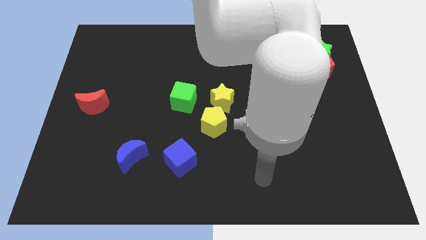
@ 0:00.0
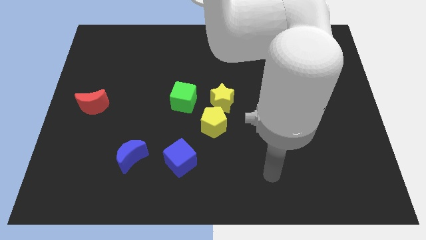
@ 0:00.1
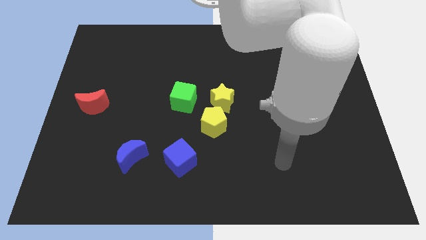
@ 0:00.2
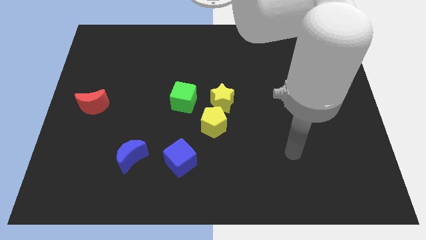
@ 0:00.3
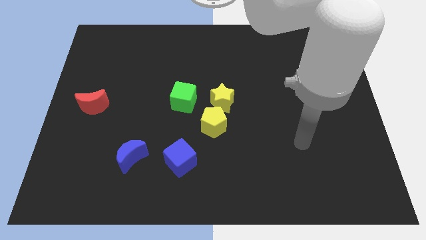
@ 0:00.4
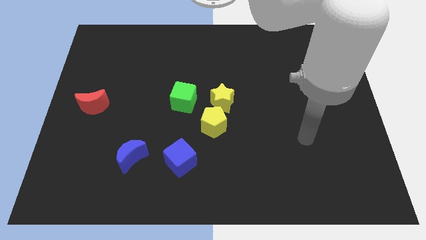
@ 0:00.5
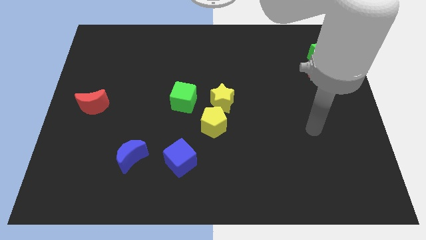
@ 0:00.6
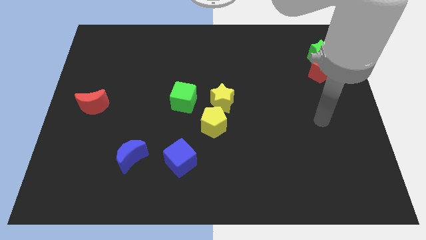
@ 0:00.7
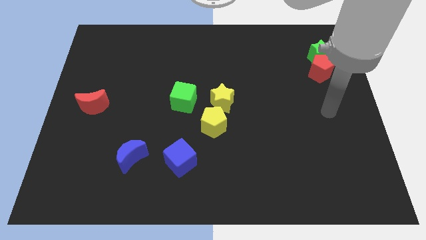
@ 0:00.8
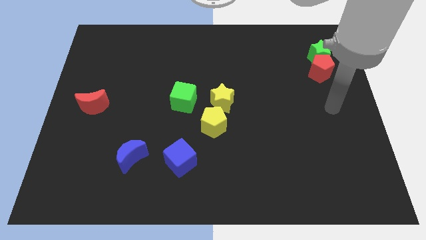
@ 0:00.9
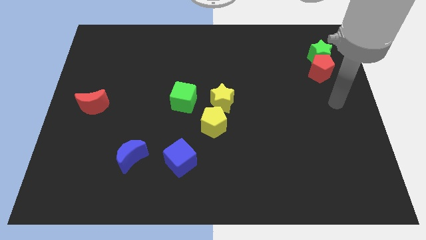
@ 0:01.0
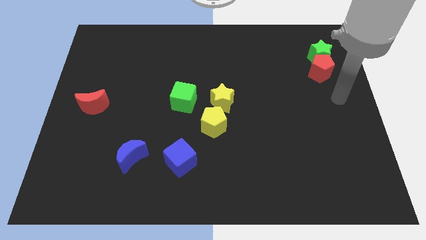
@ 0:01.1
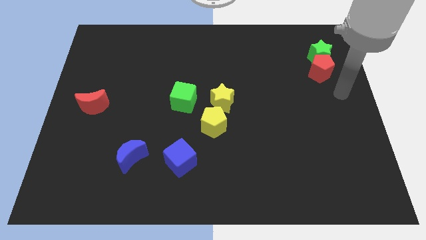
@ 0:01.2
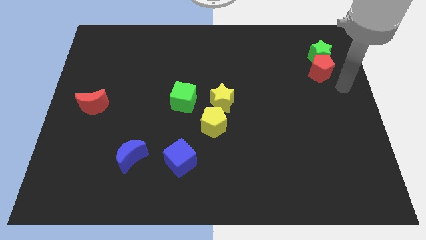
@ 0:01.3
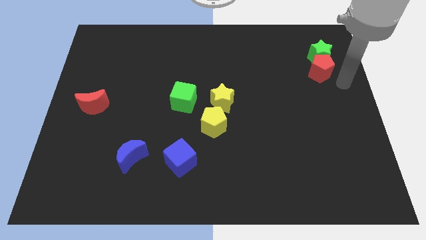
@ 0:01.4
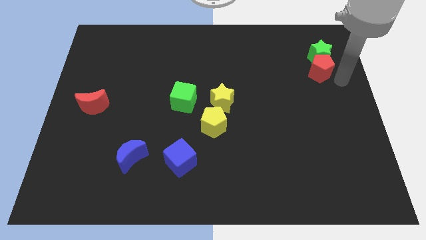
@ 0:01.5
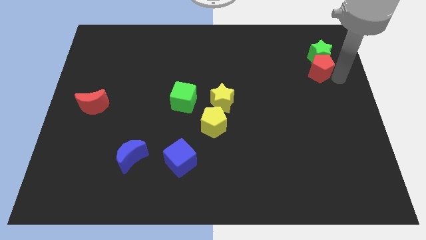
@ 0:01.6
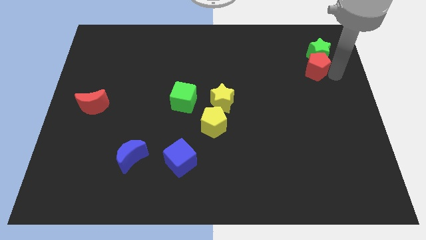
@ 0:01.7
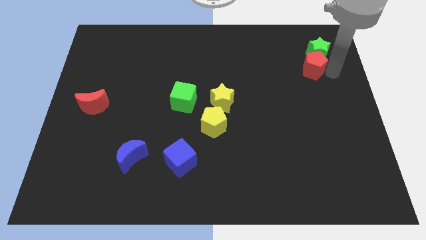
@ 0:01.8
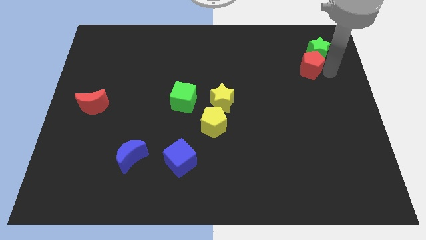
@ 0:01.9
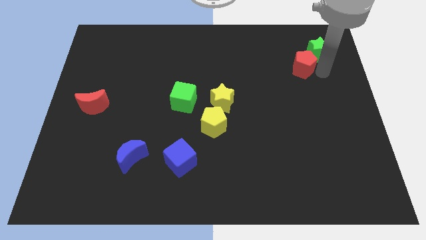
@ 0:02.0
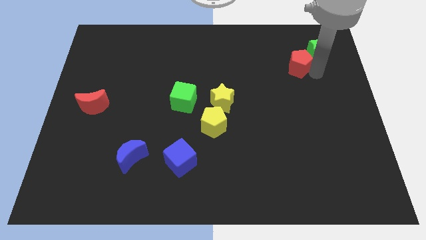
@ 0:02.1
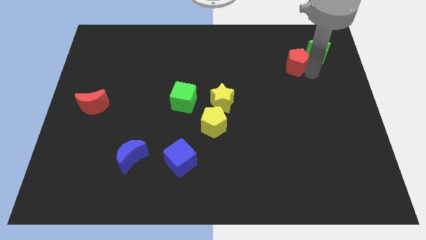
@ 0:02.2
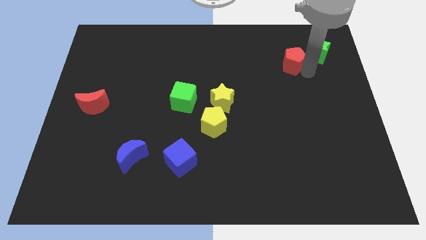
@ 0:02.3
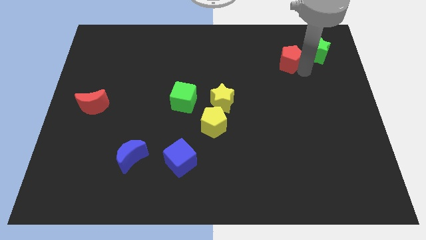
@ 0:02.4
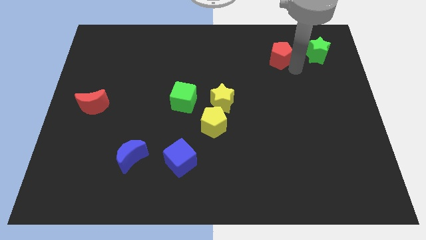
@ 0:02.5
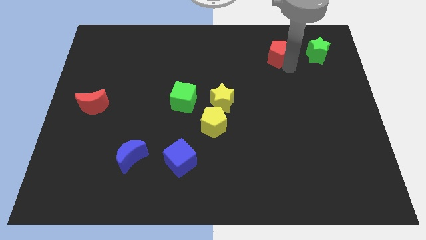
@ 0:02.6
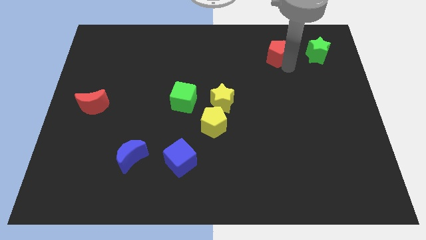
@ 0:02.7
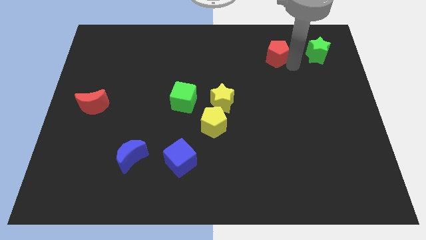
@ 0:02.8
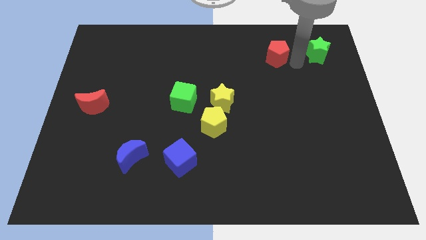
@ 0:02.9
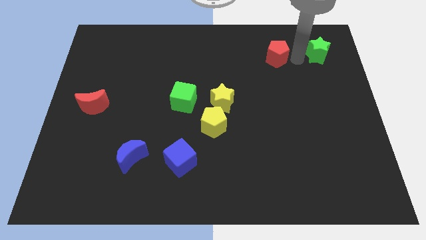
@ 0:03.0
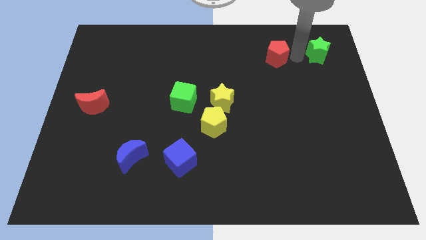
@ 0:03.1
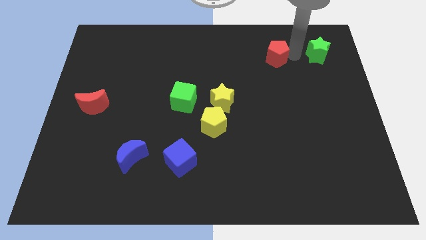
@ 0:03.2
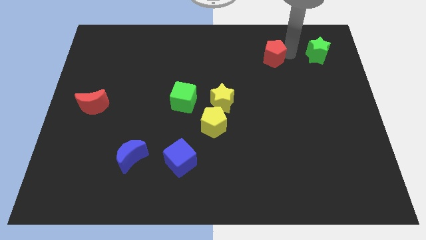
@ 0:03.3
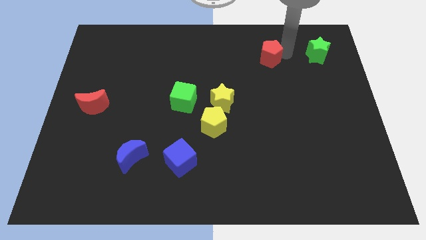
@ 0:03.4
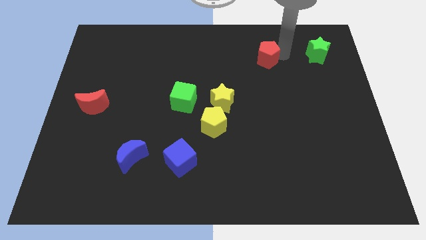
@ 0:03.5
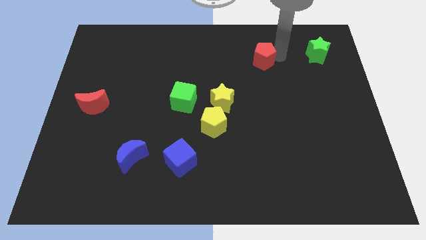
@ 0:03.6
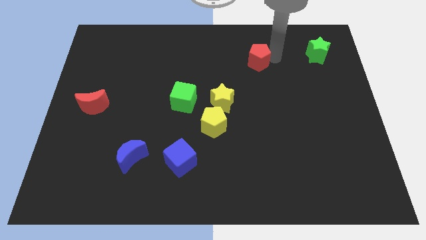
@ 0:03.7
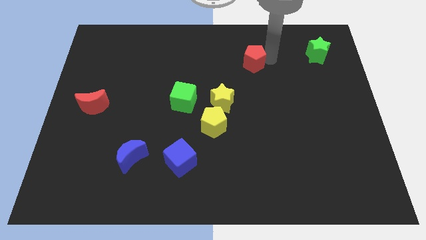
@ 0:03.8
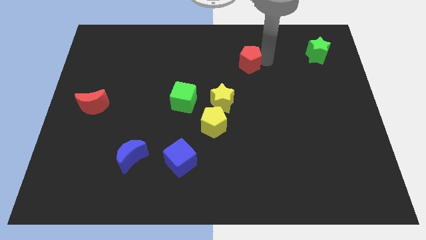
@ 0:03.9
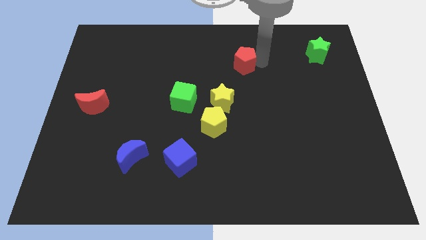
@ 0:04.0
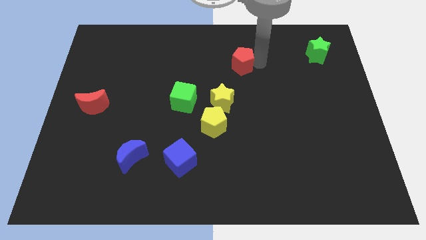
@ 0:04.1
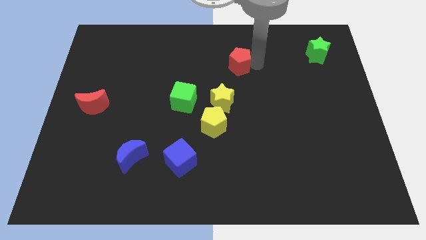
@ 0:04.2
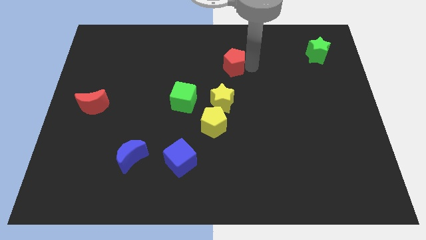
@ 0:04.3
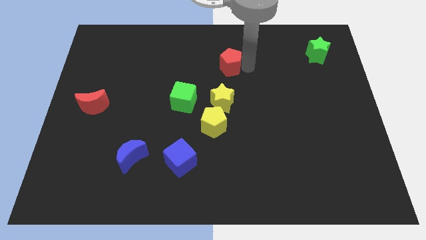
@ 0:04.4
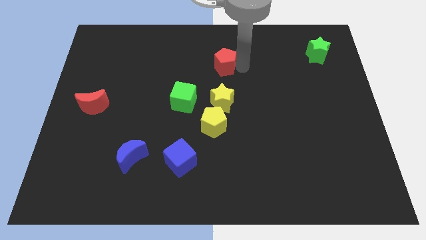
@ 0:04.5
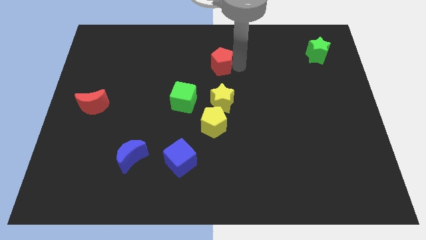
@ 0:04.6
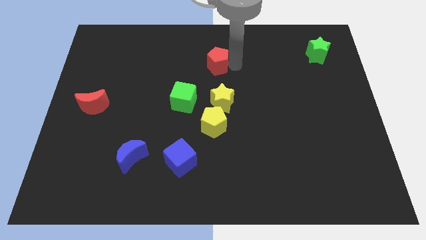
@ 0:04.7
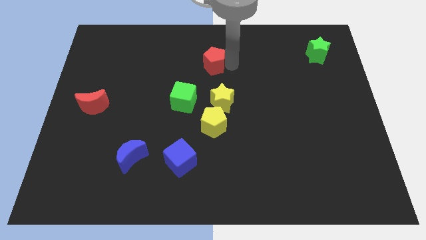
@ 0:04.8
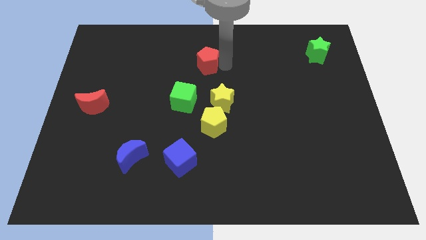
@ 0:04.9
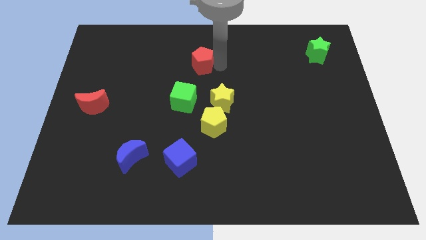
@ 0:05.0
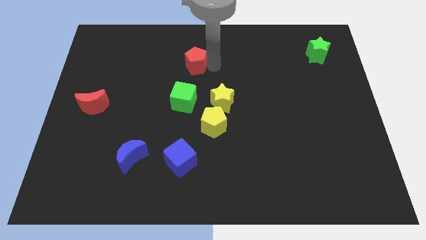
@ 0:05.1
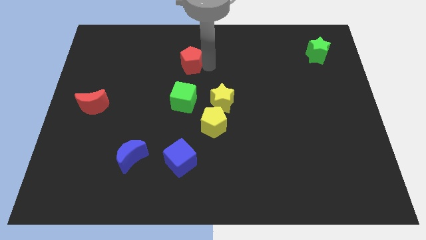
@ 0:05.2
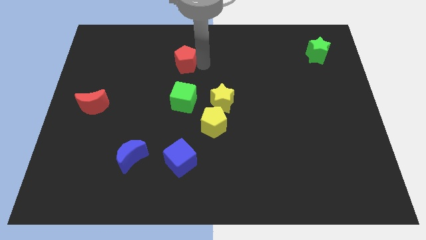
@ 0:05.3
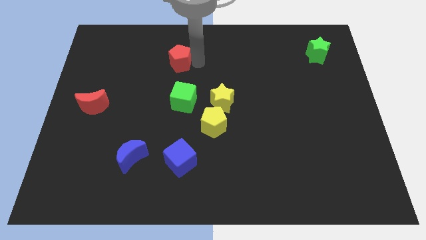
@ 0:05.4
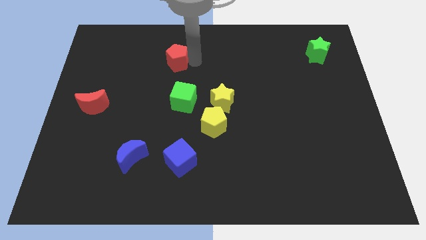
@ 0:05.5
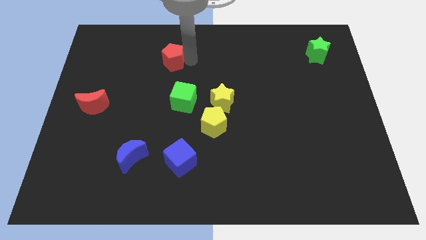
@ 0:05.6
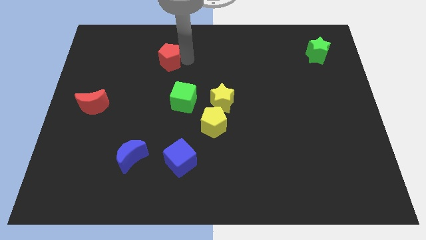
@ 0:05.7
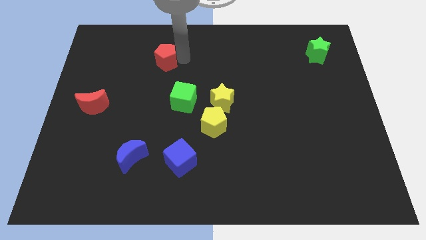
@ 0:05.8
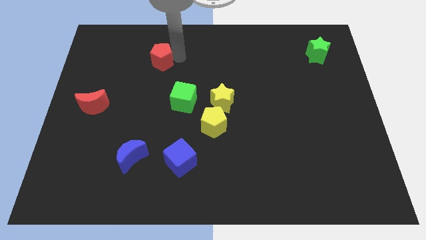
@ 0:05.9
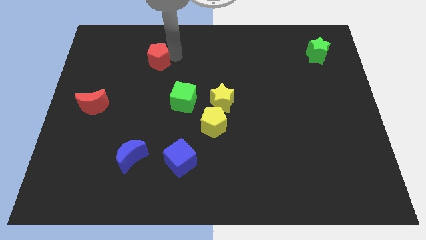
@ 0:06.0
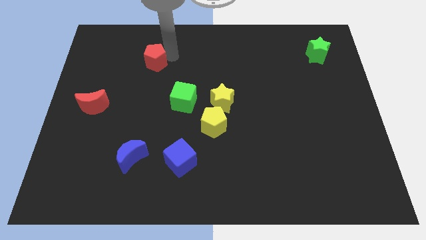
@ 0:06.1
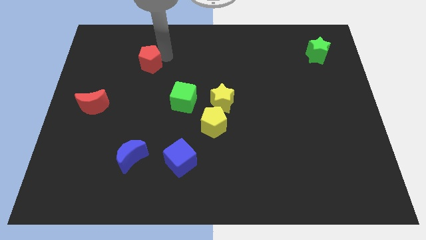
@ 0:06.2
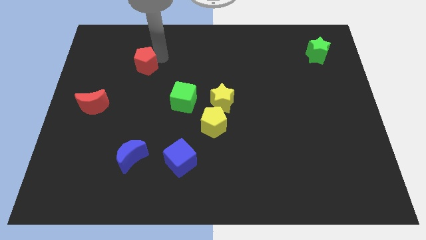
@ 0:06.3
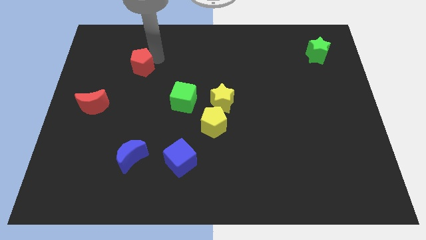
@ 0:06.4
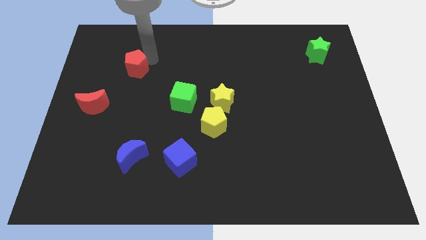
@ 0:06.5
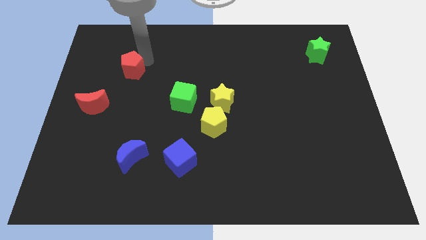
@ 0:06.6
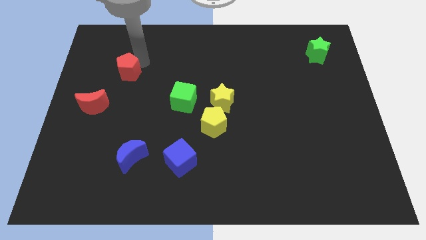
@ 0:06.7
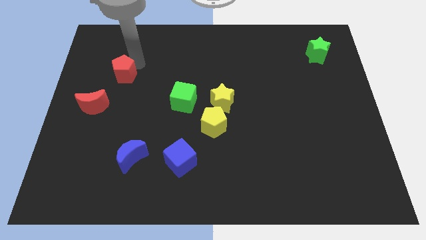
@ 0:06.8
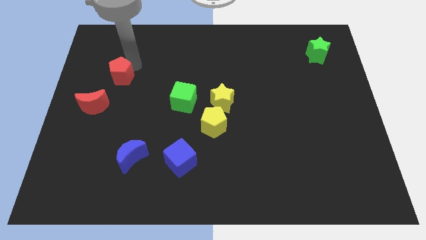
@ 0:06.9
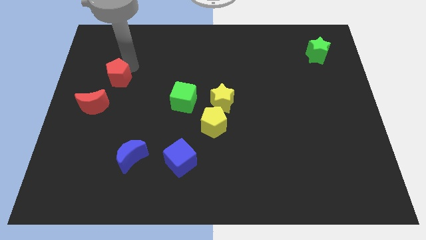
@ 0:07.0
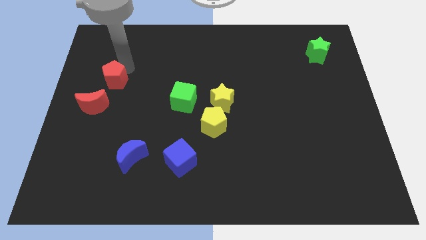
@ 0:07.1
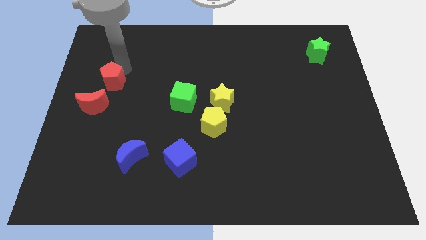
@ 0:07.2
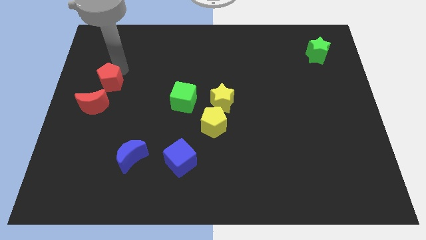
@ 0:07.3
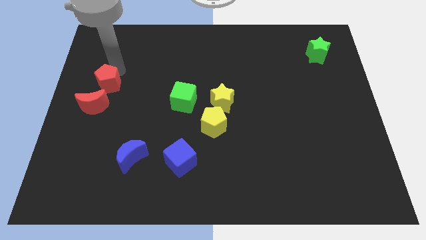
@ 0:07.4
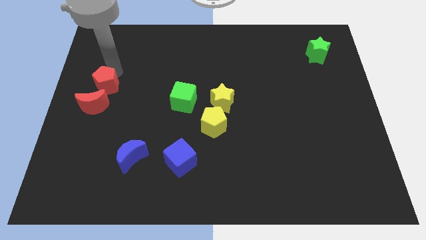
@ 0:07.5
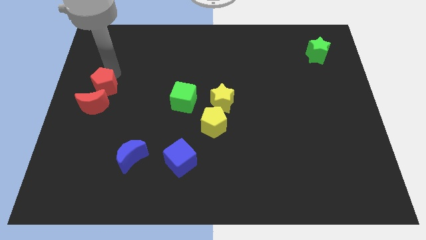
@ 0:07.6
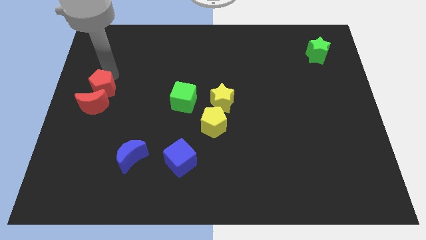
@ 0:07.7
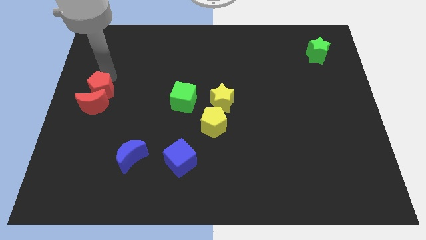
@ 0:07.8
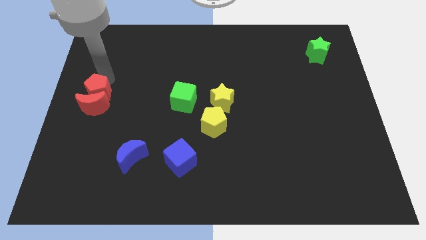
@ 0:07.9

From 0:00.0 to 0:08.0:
push the red pentagon towards the red moon

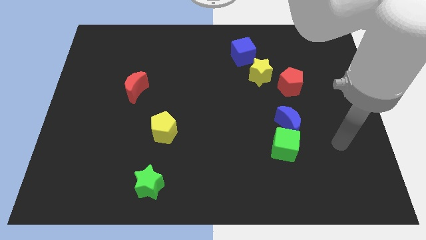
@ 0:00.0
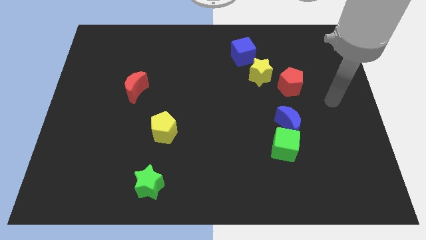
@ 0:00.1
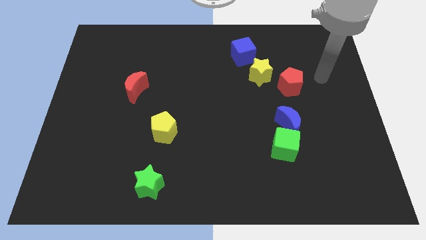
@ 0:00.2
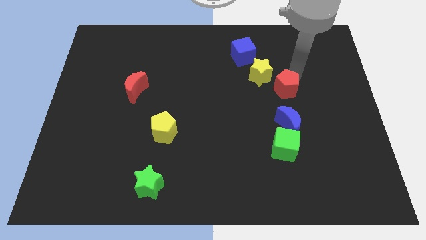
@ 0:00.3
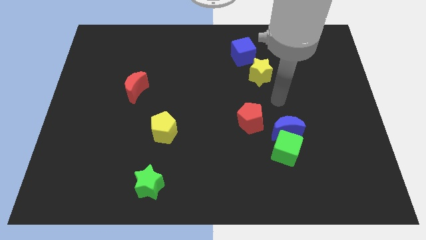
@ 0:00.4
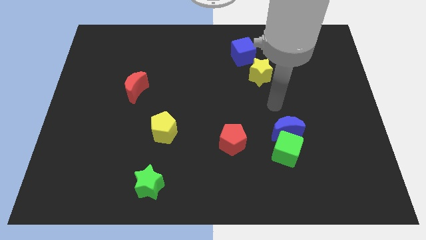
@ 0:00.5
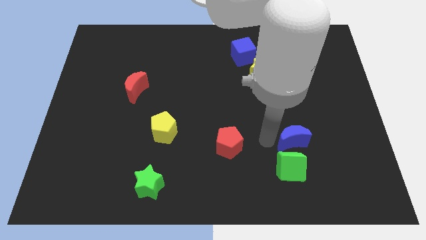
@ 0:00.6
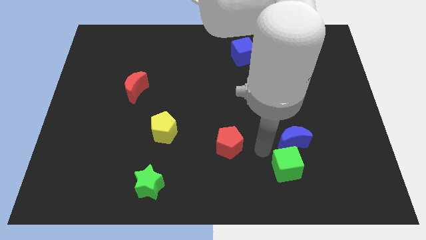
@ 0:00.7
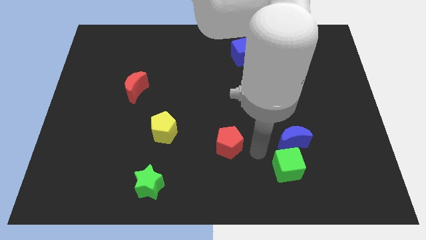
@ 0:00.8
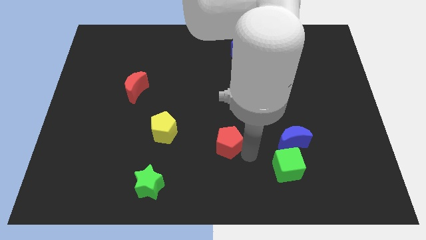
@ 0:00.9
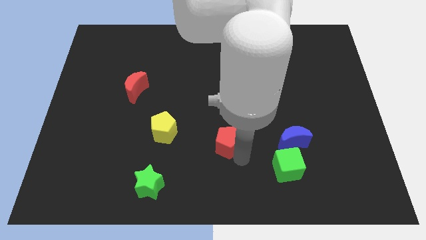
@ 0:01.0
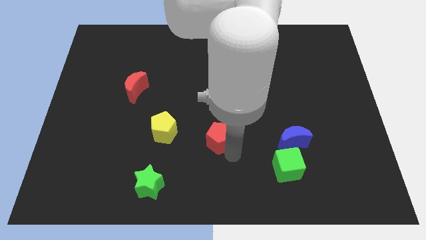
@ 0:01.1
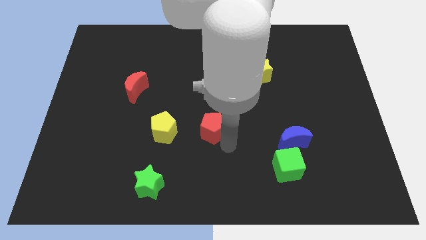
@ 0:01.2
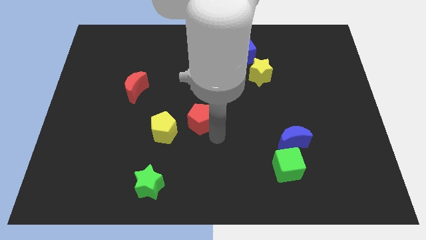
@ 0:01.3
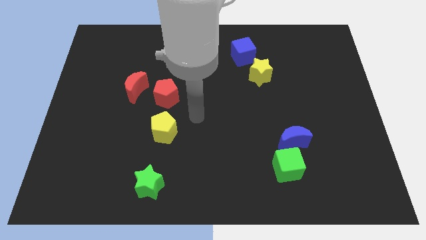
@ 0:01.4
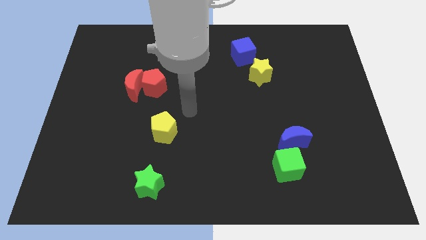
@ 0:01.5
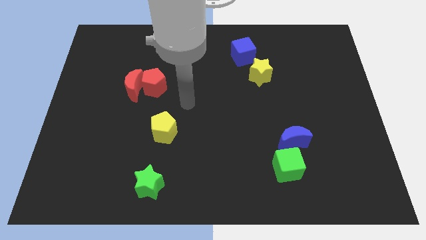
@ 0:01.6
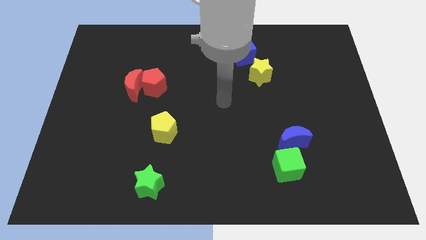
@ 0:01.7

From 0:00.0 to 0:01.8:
move the red pentagon next to the red moon
